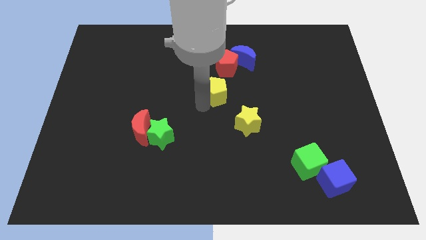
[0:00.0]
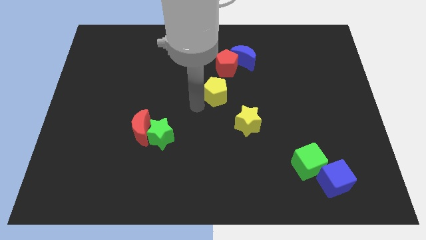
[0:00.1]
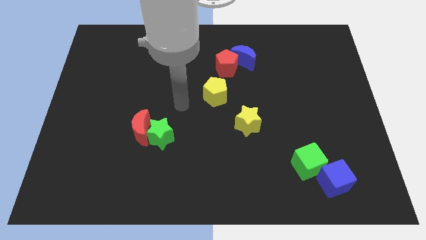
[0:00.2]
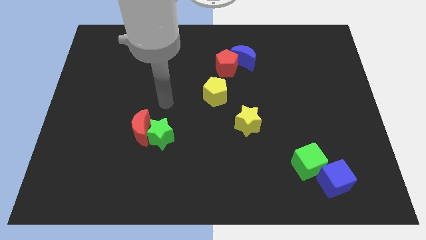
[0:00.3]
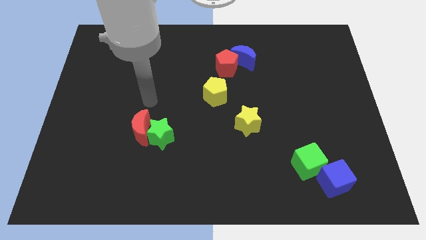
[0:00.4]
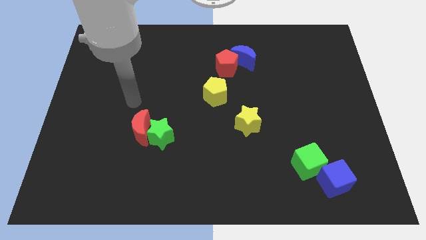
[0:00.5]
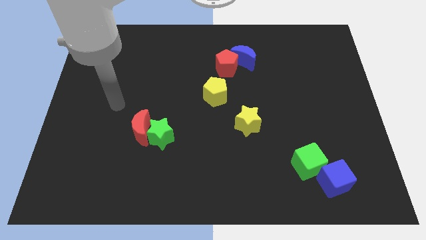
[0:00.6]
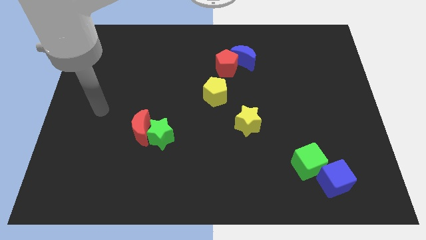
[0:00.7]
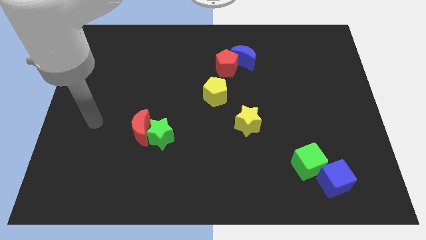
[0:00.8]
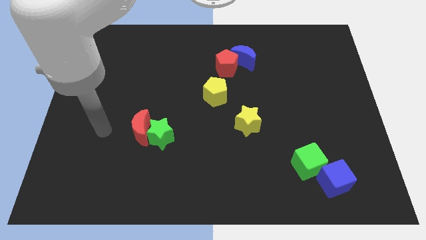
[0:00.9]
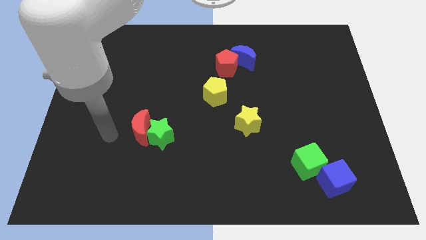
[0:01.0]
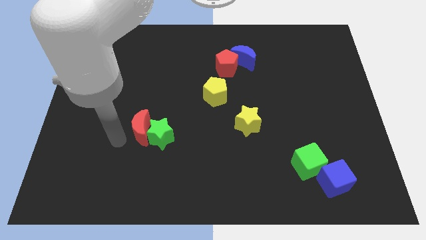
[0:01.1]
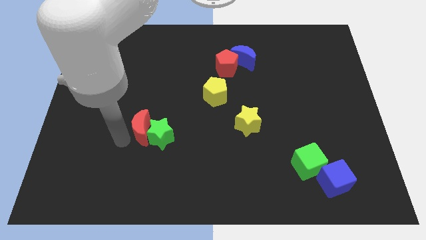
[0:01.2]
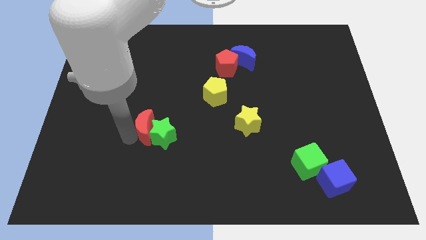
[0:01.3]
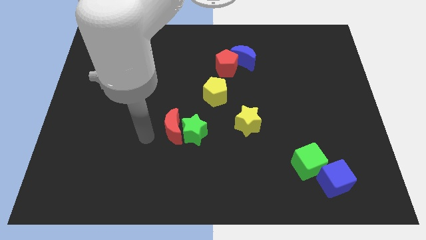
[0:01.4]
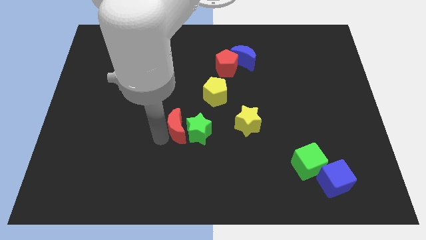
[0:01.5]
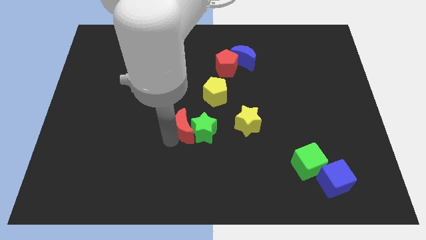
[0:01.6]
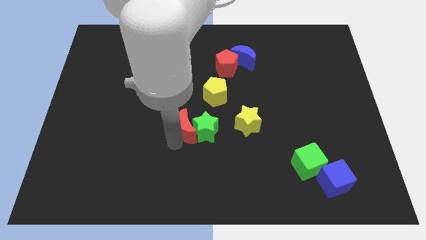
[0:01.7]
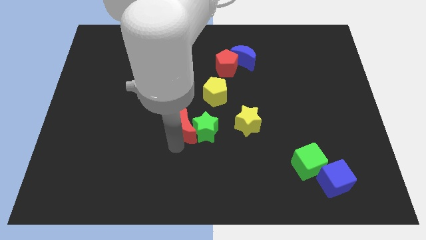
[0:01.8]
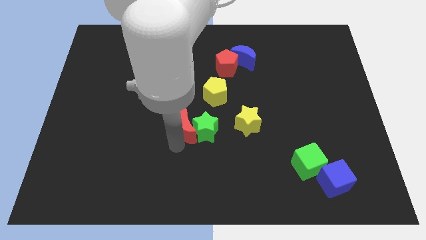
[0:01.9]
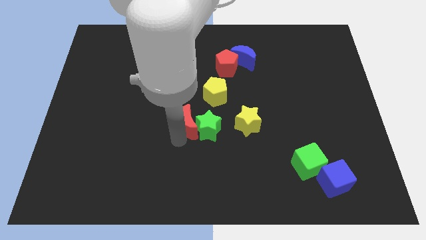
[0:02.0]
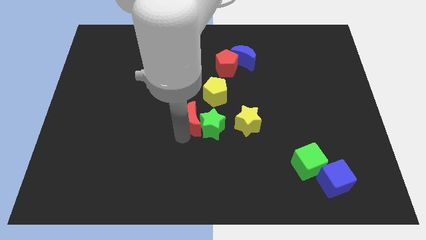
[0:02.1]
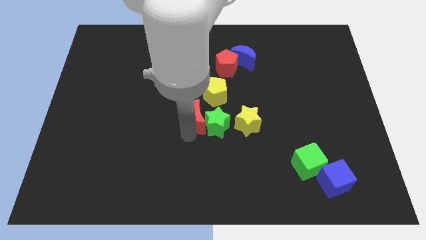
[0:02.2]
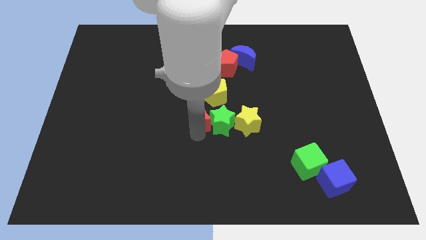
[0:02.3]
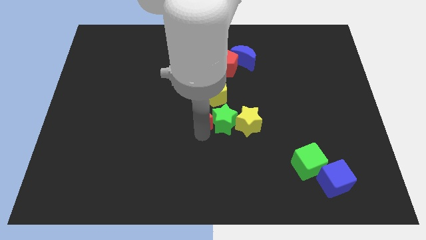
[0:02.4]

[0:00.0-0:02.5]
push the red moon and green star towards the center of the board

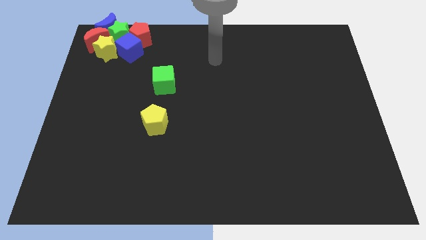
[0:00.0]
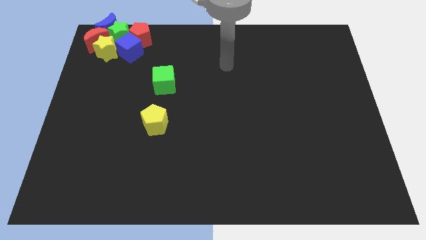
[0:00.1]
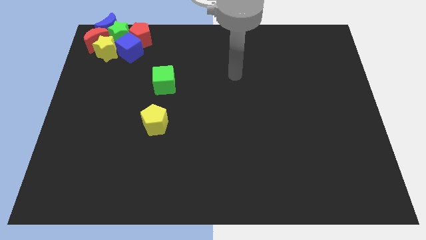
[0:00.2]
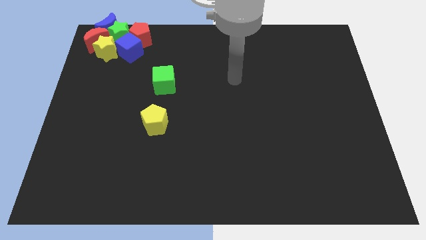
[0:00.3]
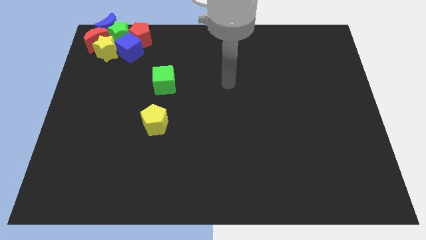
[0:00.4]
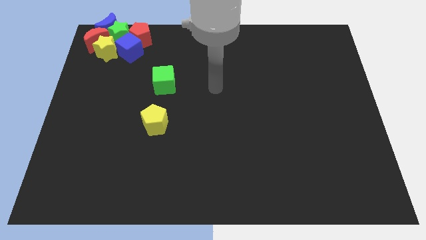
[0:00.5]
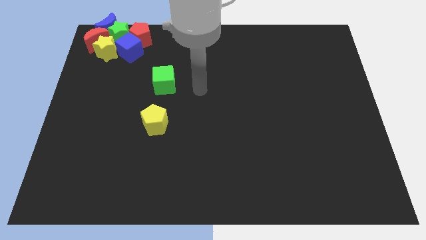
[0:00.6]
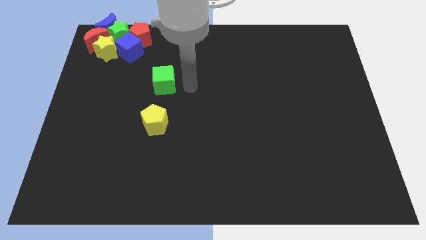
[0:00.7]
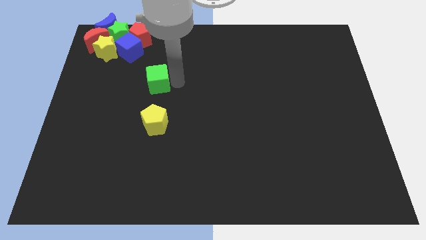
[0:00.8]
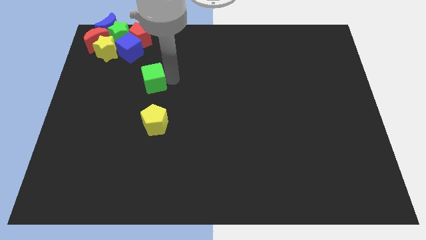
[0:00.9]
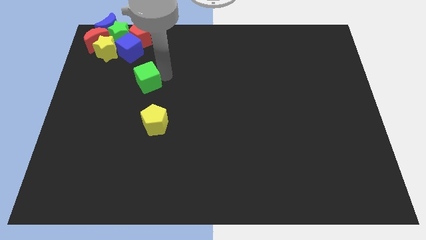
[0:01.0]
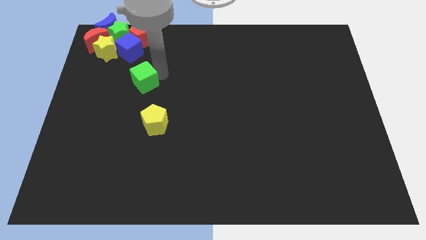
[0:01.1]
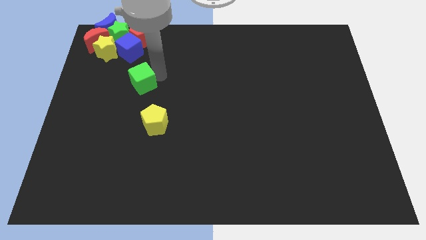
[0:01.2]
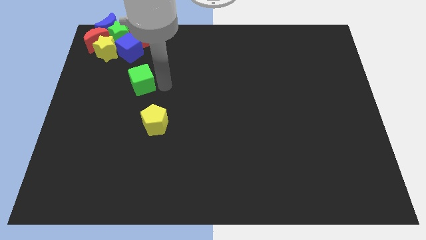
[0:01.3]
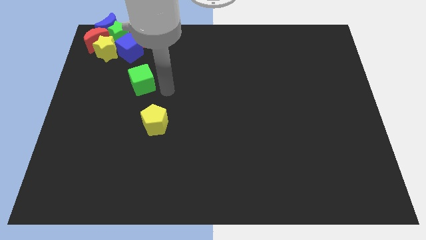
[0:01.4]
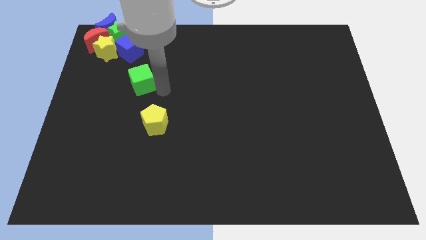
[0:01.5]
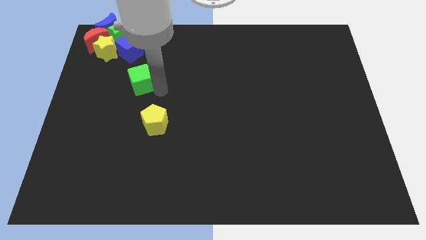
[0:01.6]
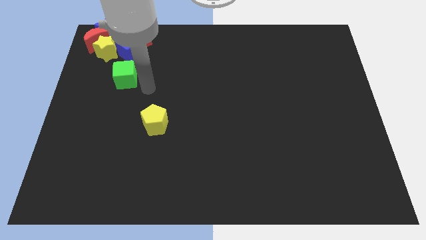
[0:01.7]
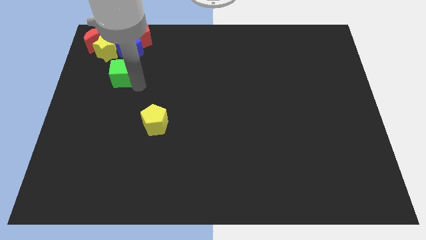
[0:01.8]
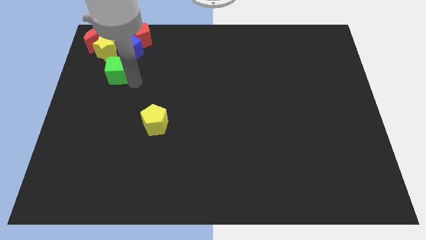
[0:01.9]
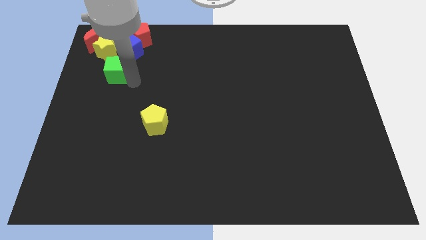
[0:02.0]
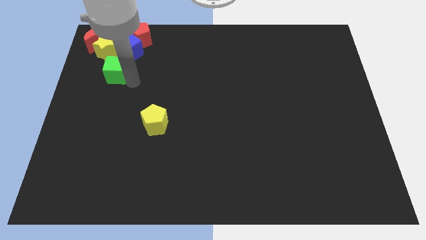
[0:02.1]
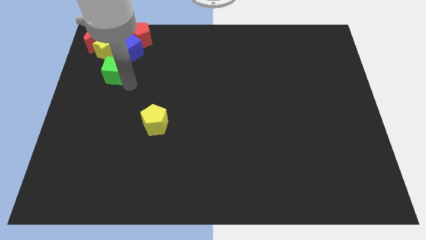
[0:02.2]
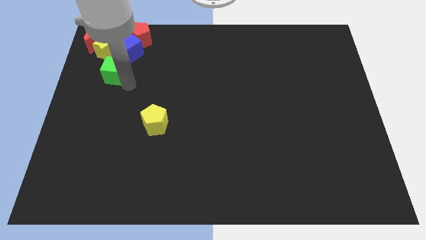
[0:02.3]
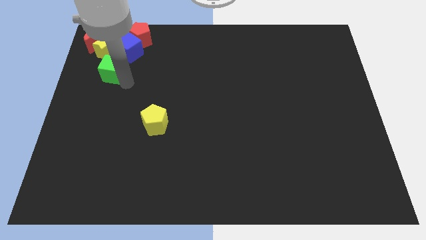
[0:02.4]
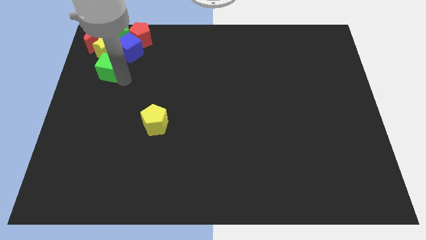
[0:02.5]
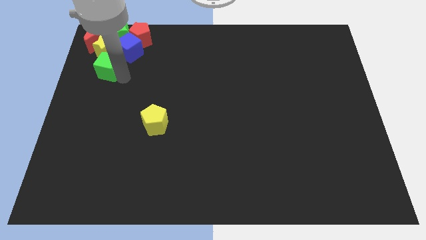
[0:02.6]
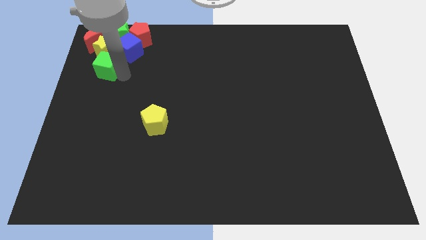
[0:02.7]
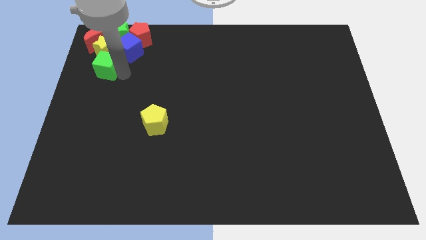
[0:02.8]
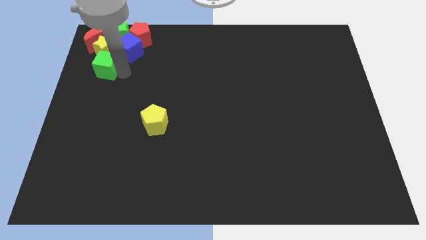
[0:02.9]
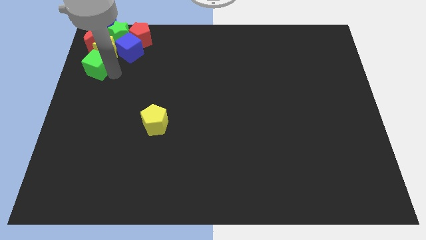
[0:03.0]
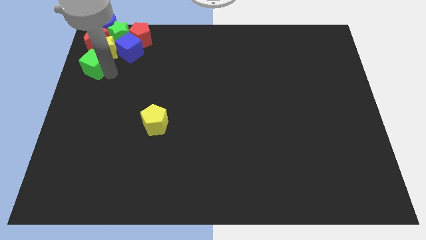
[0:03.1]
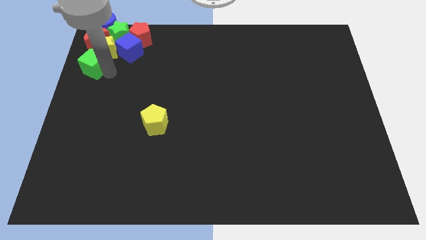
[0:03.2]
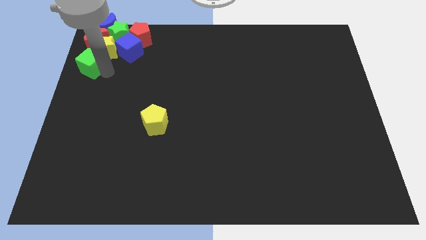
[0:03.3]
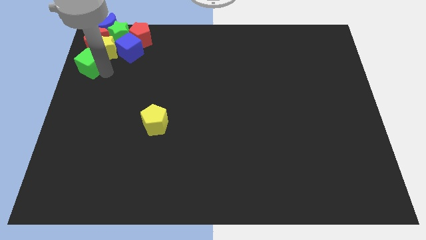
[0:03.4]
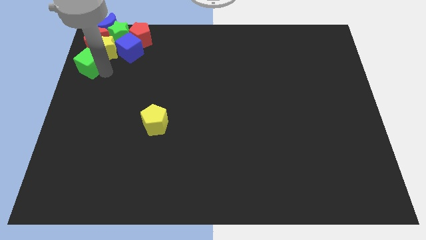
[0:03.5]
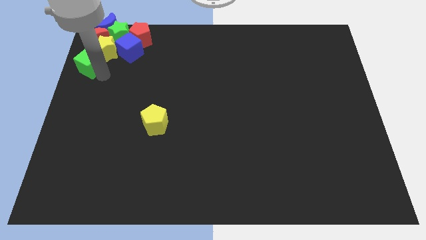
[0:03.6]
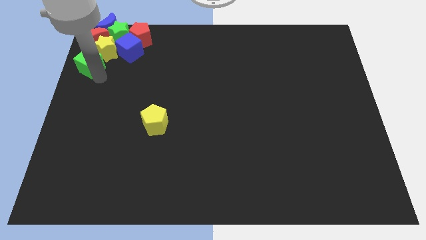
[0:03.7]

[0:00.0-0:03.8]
push the green cube to the bottom left side of the yellow star

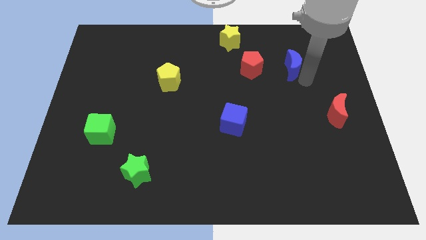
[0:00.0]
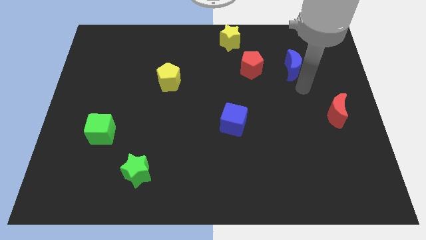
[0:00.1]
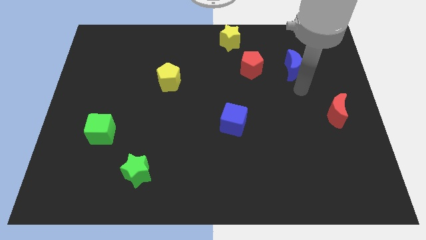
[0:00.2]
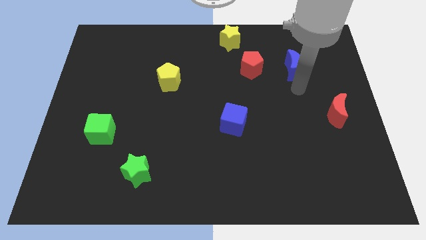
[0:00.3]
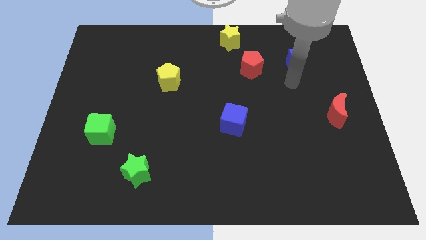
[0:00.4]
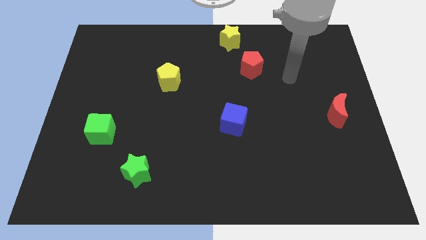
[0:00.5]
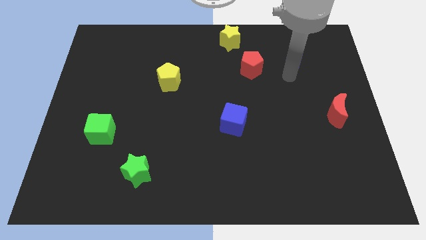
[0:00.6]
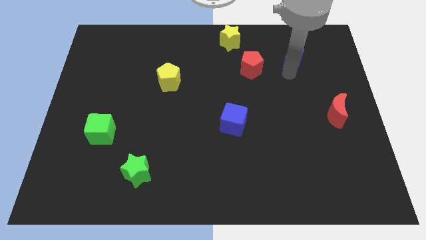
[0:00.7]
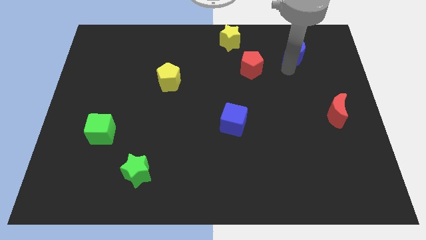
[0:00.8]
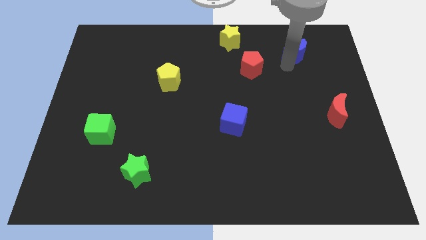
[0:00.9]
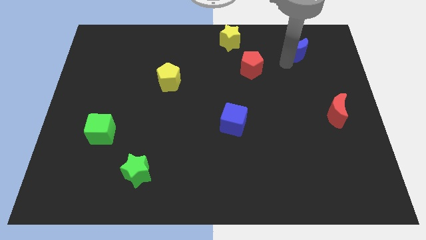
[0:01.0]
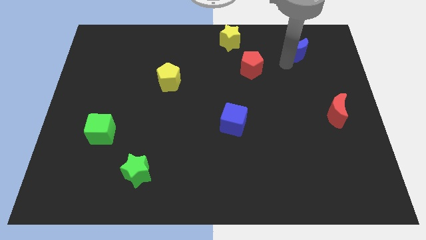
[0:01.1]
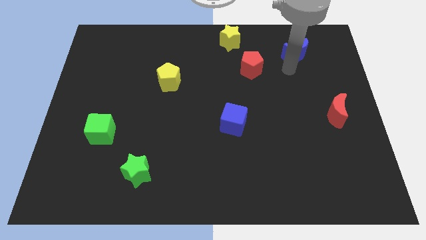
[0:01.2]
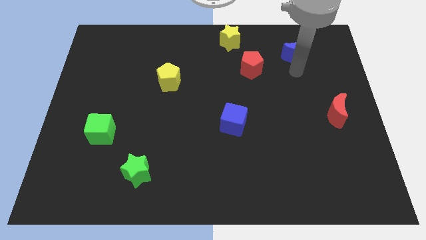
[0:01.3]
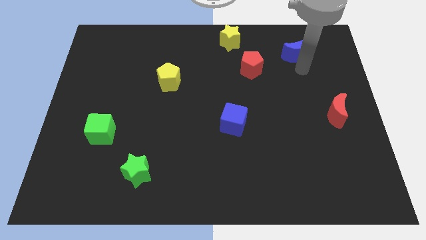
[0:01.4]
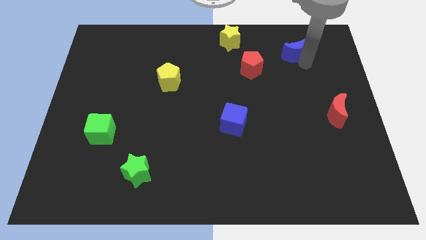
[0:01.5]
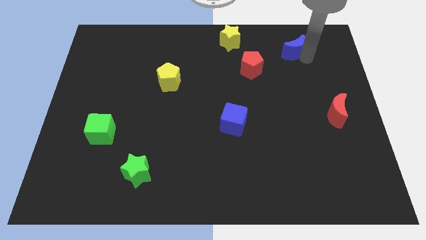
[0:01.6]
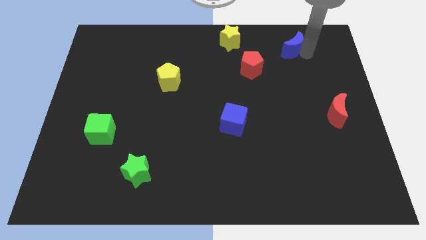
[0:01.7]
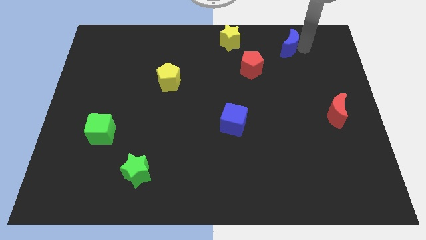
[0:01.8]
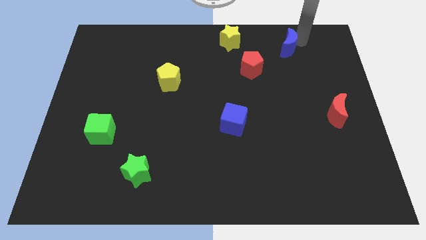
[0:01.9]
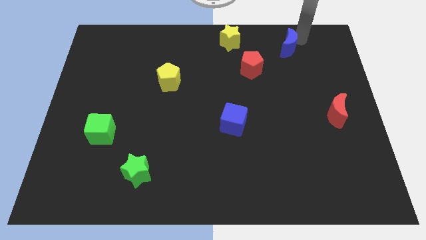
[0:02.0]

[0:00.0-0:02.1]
move the blue cube to the top right of the red pentagon

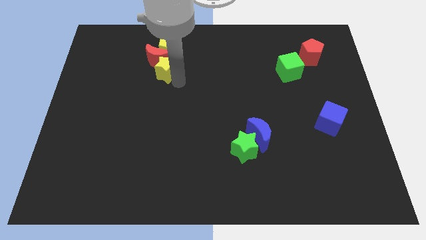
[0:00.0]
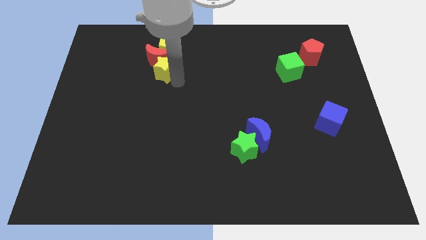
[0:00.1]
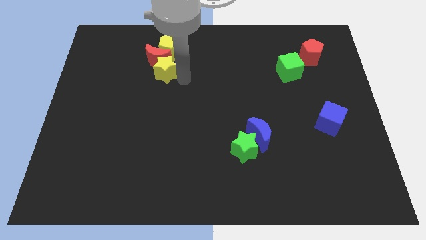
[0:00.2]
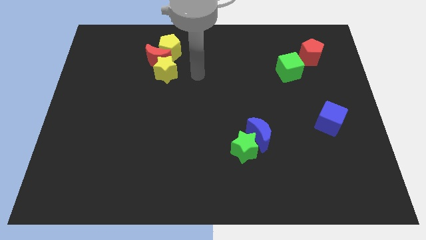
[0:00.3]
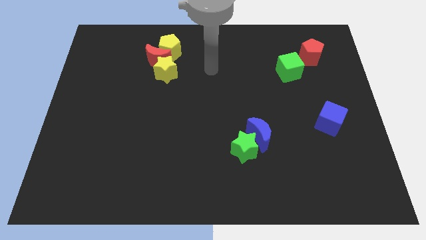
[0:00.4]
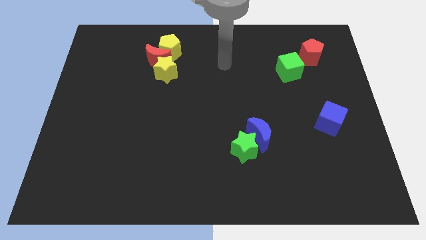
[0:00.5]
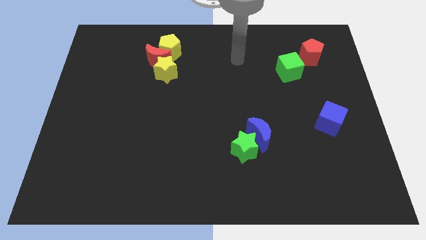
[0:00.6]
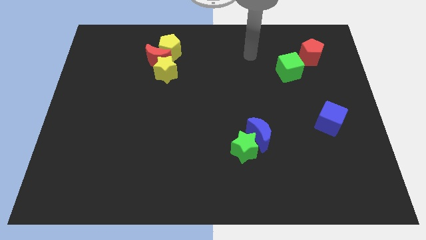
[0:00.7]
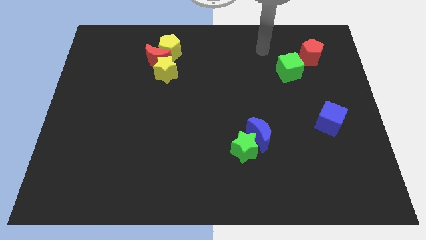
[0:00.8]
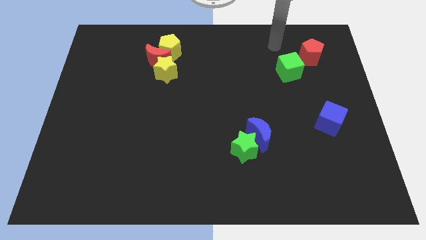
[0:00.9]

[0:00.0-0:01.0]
move your arm away from yellow star
